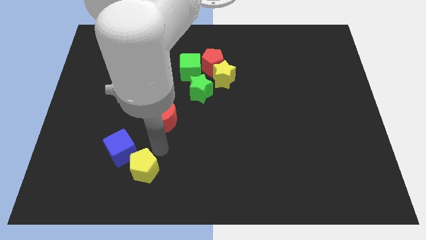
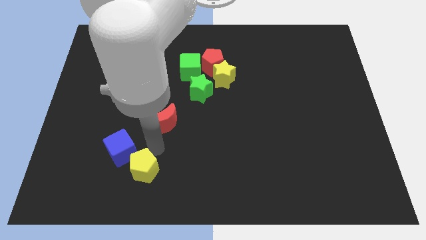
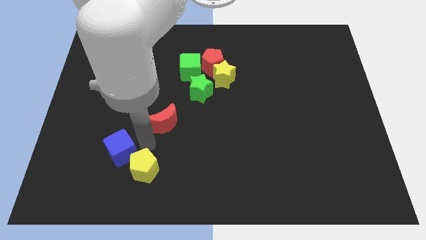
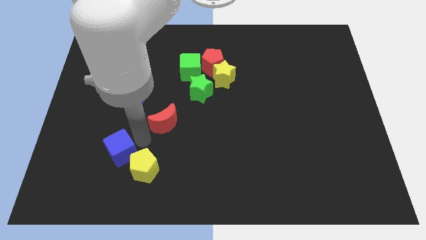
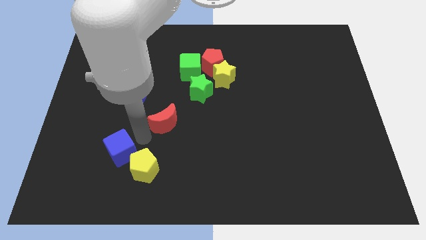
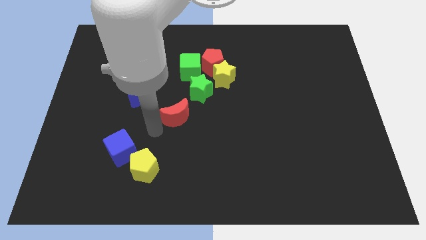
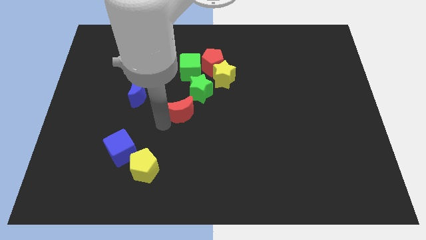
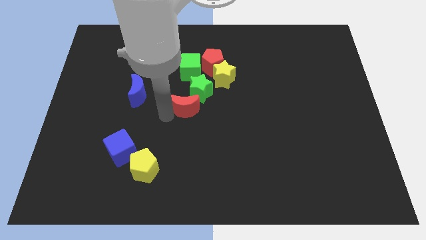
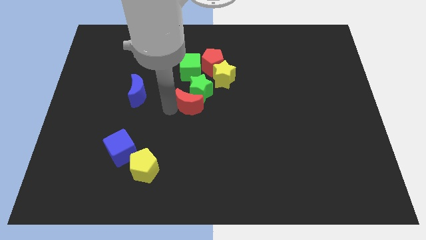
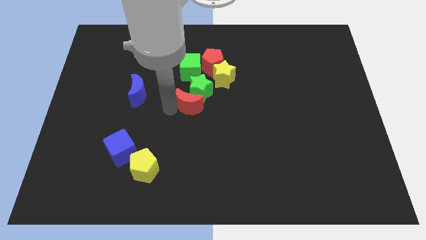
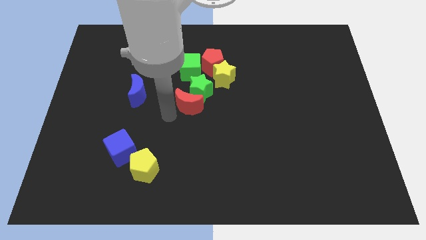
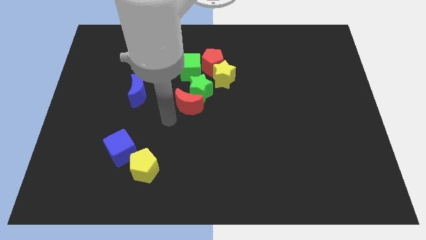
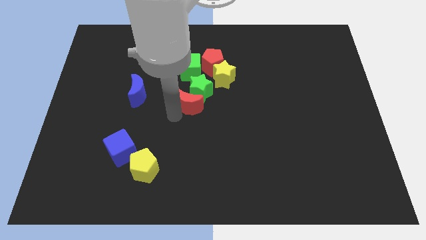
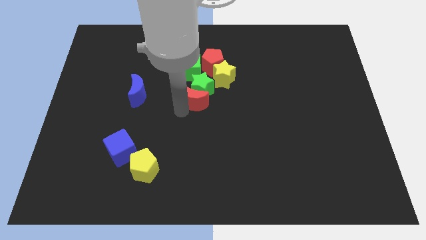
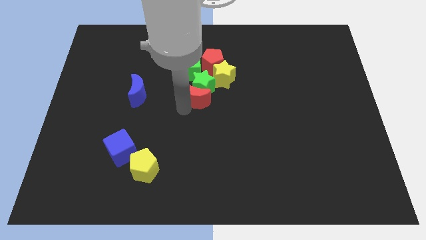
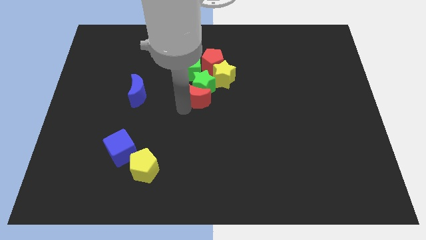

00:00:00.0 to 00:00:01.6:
move the red crescent into the green star

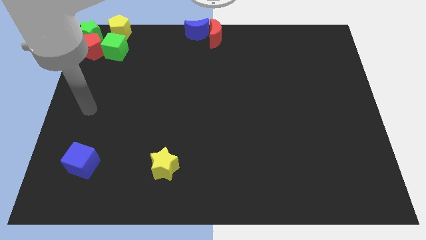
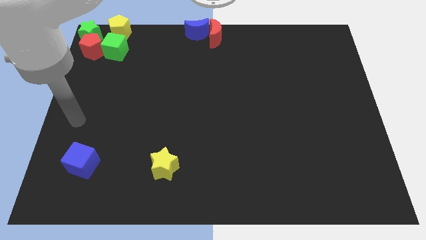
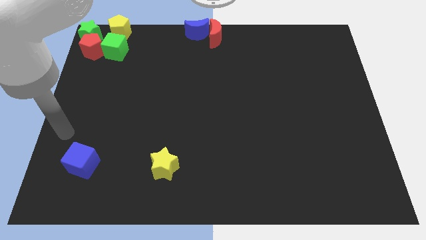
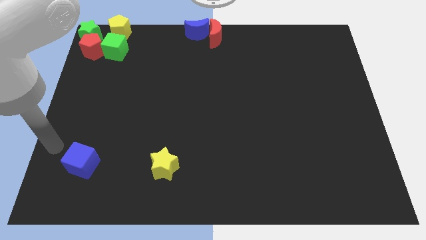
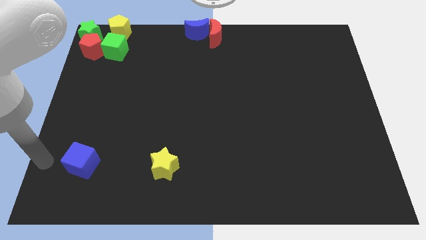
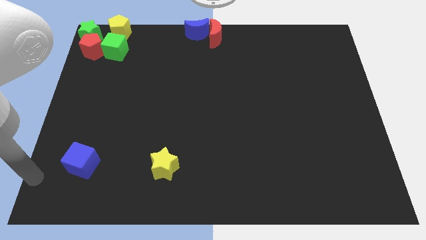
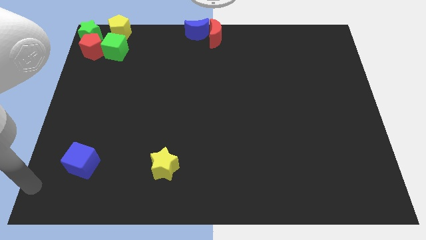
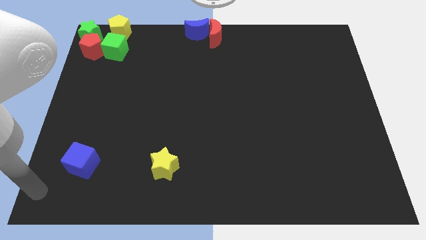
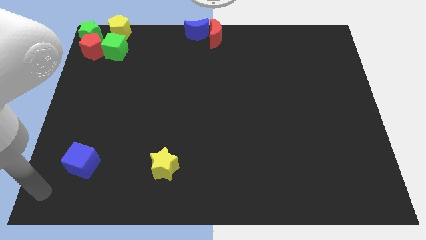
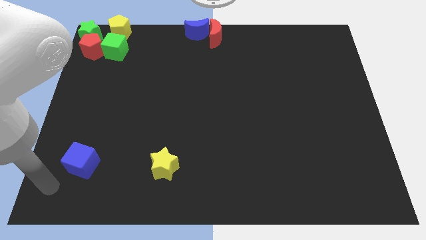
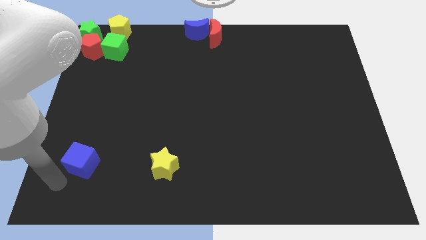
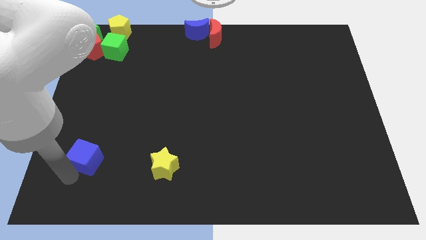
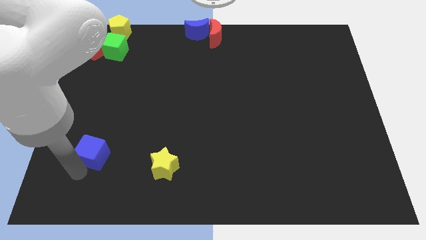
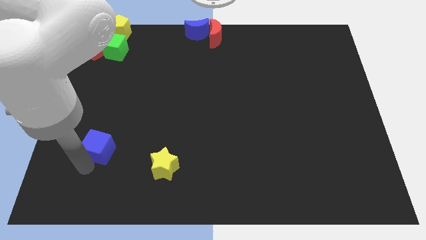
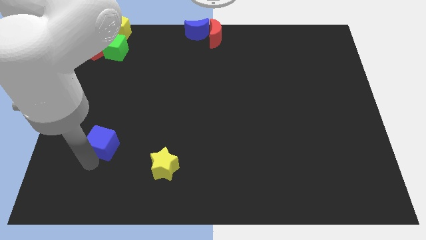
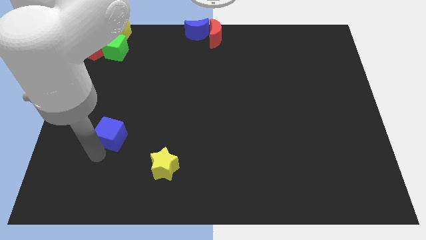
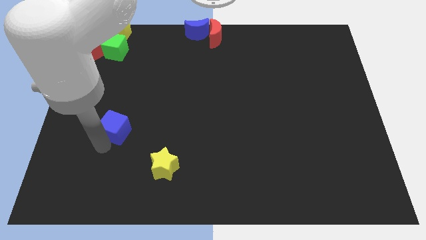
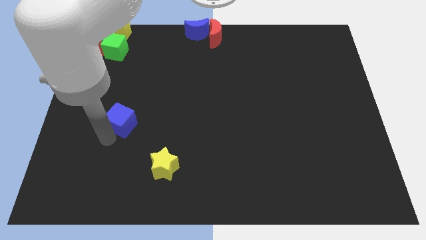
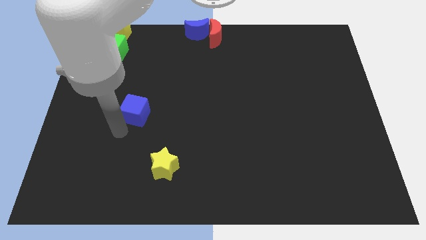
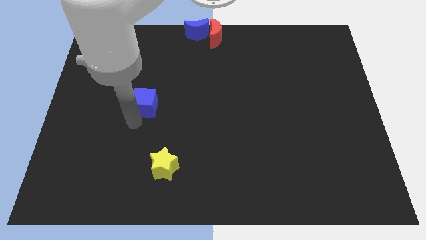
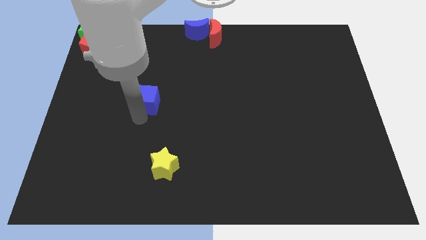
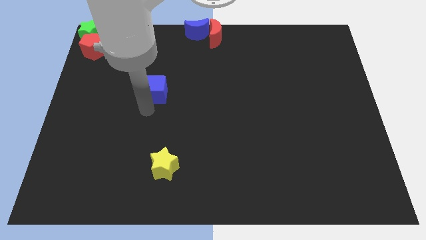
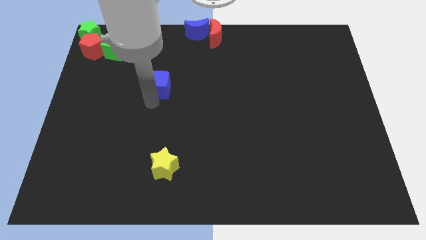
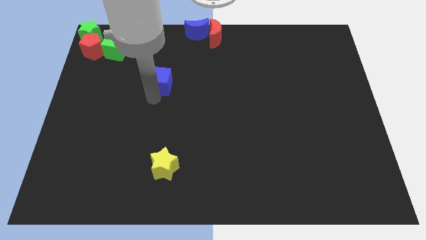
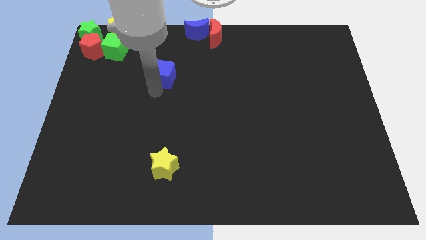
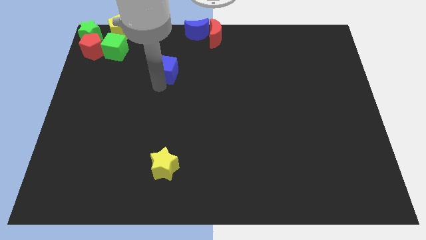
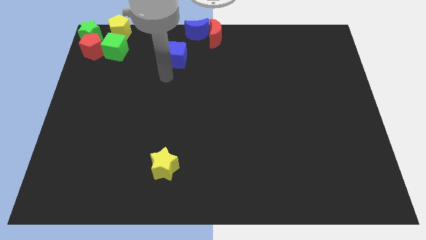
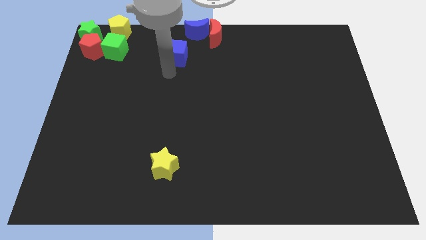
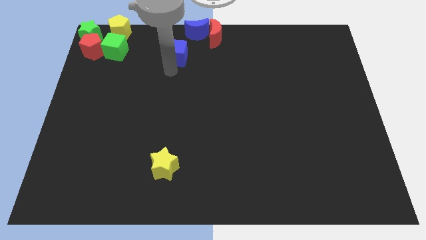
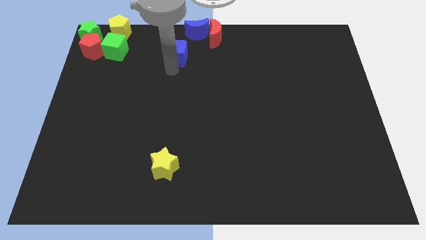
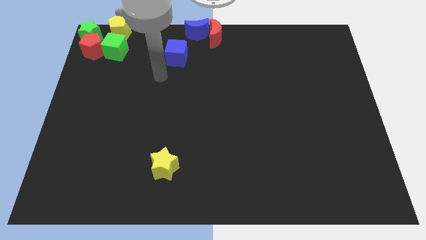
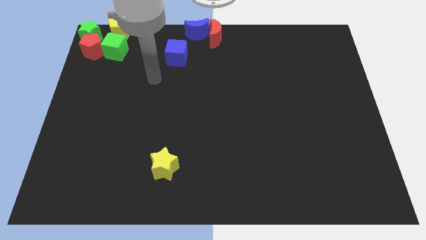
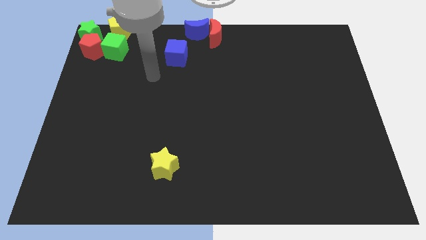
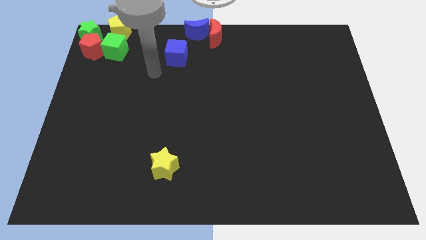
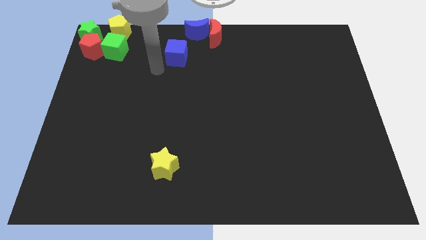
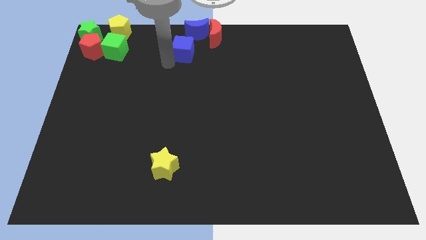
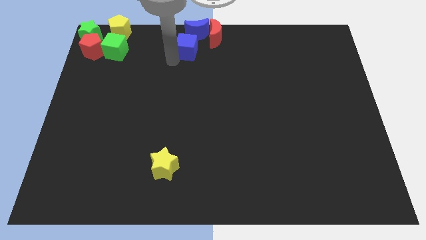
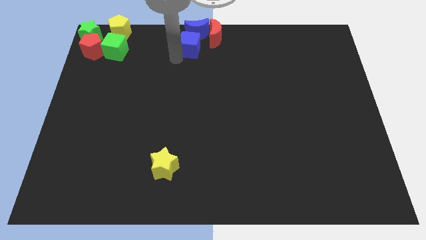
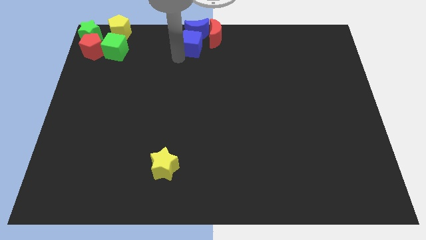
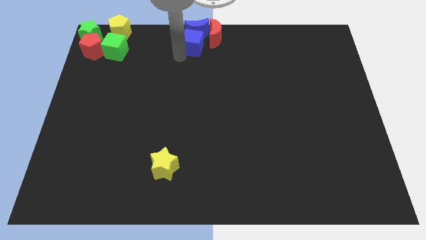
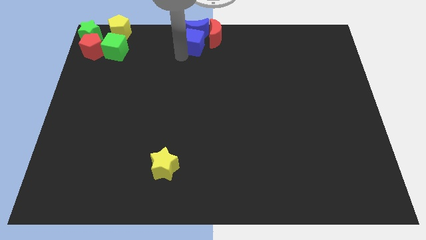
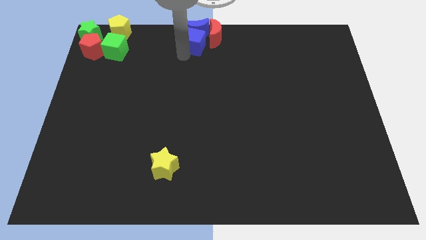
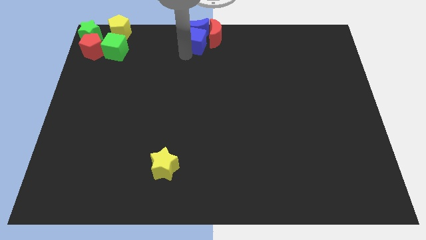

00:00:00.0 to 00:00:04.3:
slide the blue cube to the top center

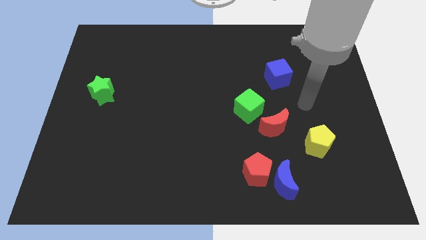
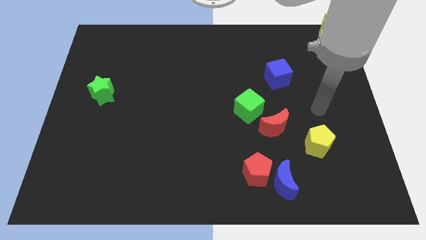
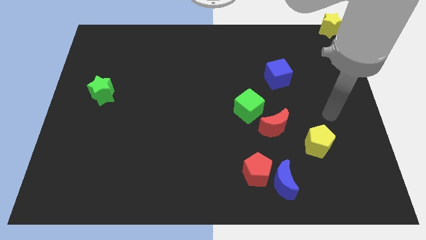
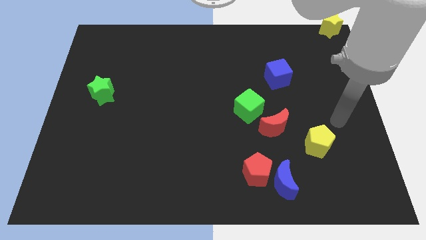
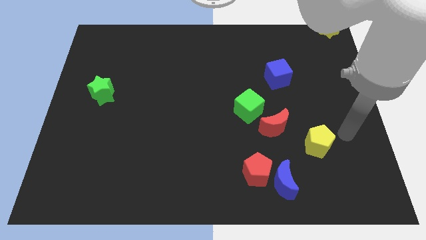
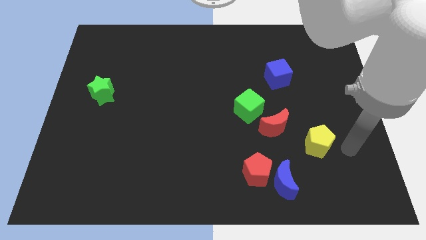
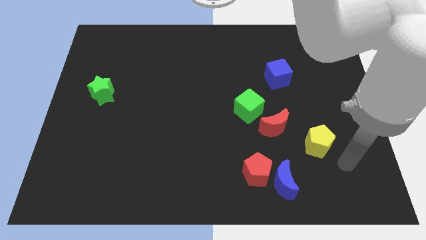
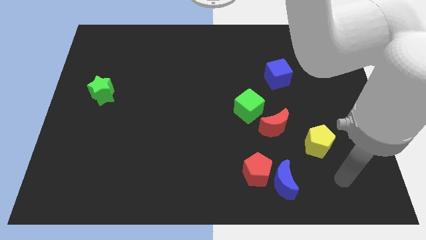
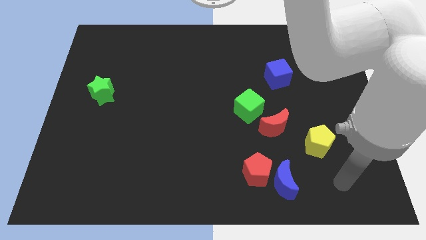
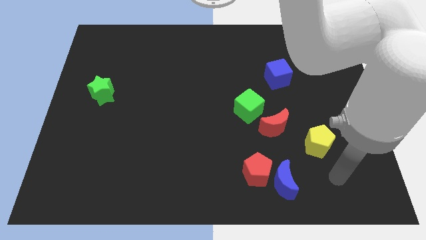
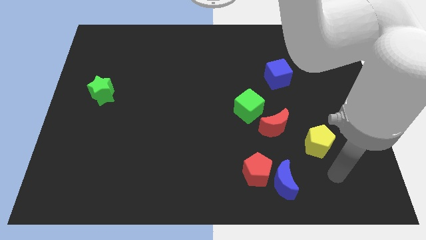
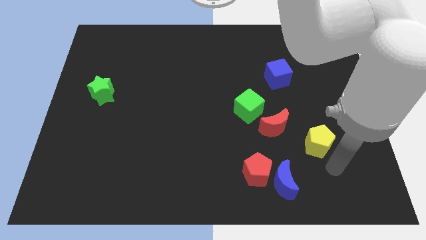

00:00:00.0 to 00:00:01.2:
move the arm towards the yellow pentagon

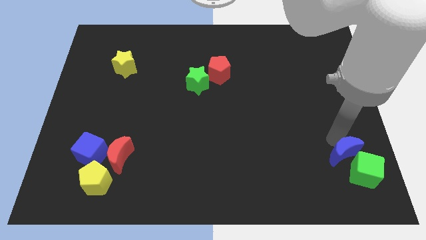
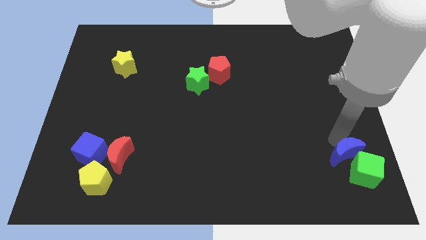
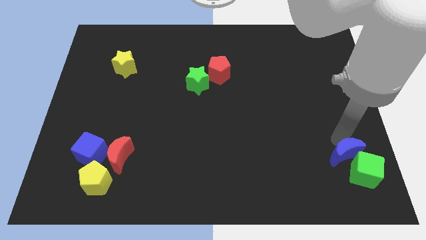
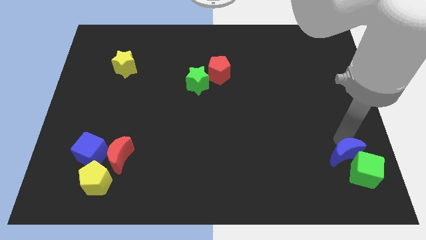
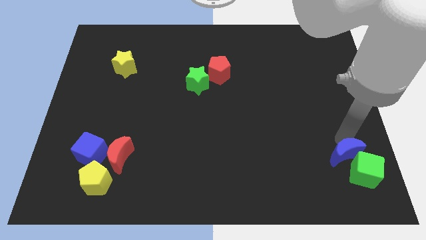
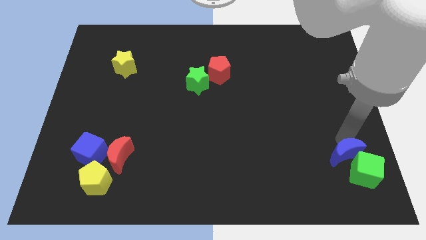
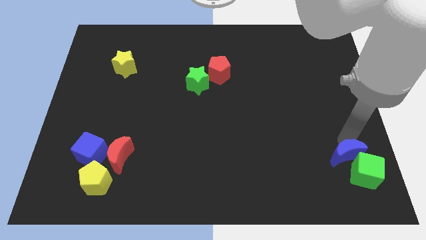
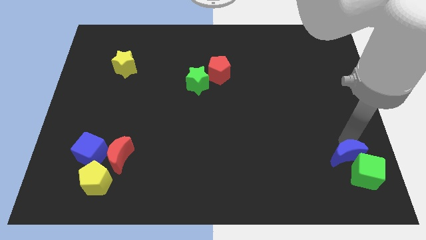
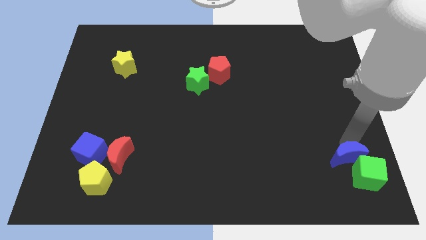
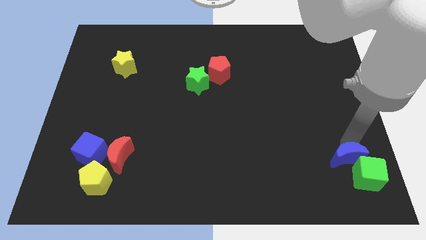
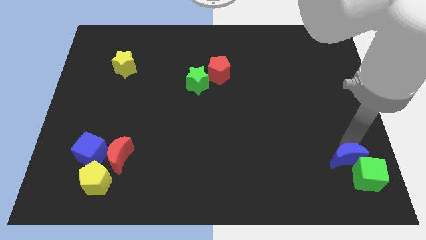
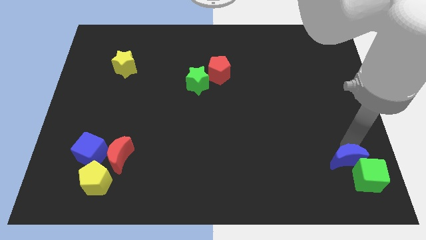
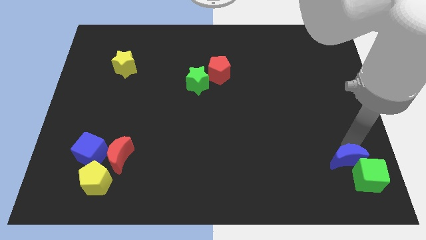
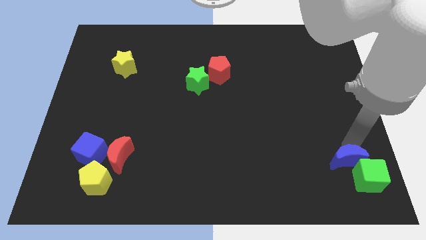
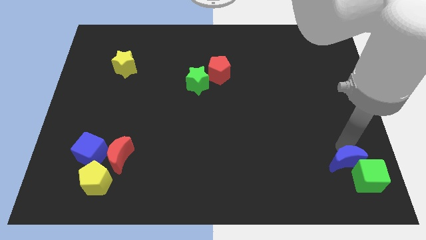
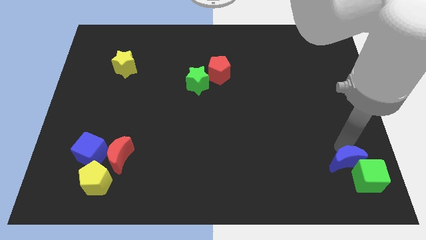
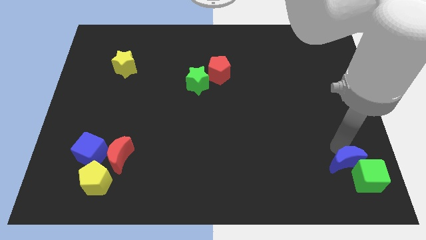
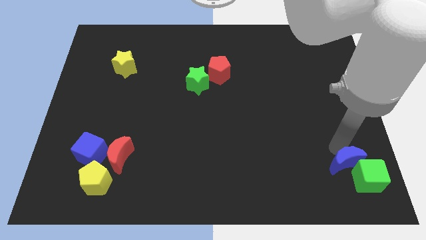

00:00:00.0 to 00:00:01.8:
push the blue crescent in to the green cube

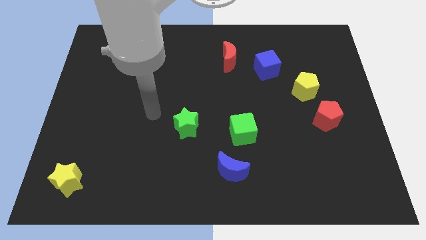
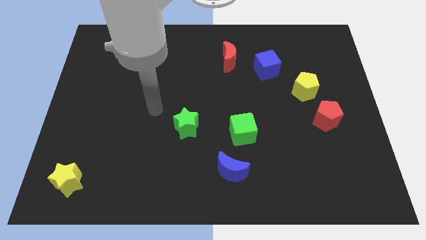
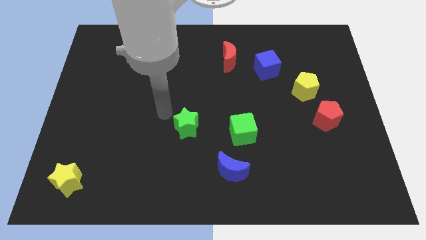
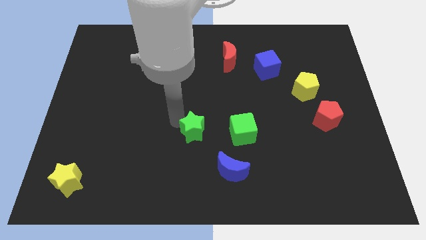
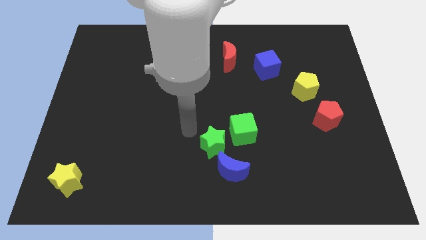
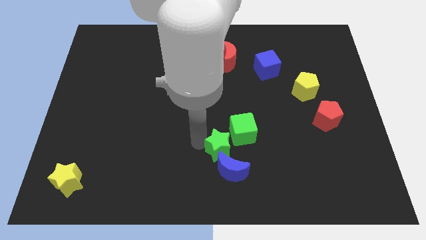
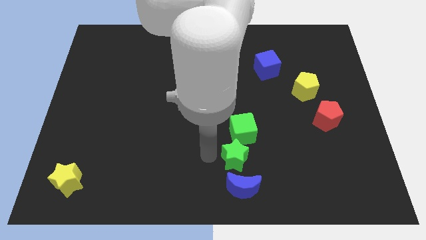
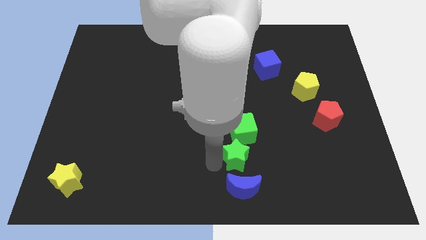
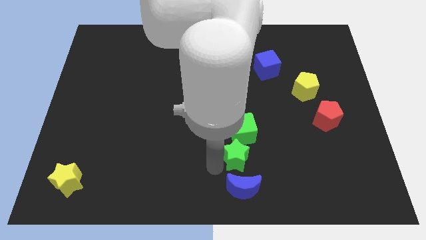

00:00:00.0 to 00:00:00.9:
push green star into the blue moon
